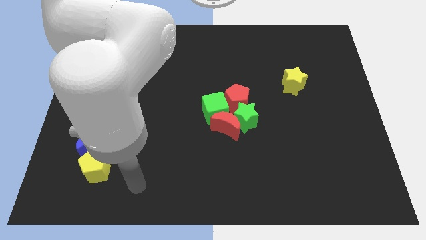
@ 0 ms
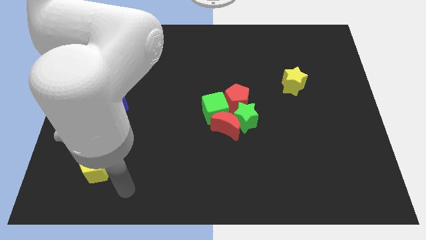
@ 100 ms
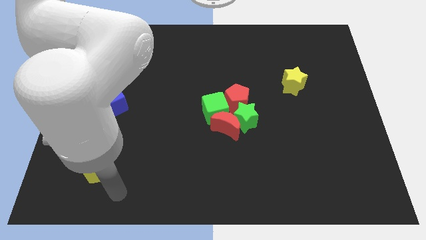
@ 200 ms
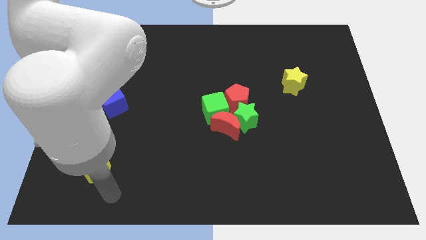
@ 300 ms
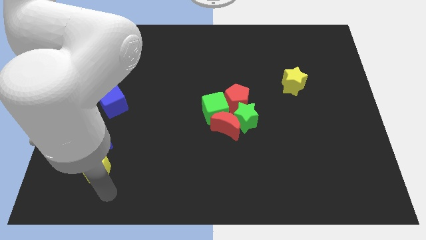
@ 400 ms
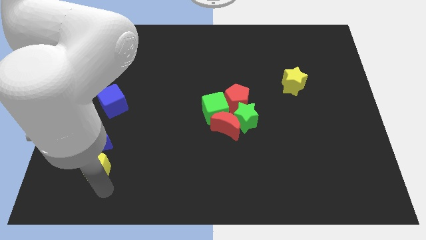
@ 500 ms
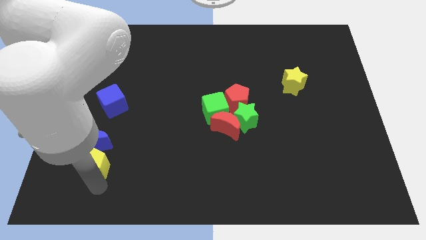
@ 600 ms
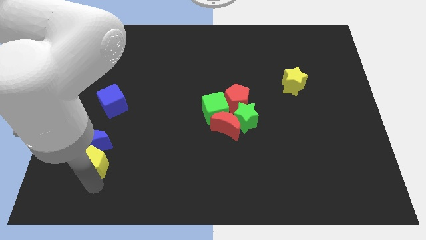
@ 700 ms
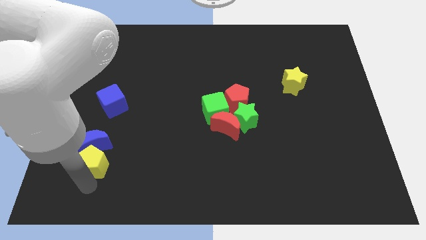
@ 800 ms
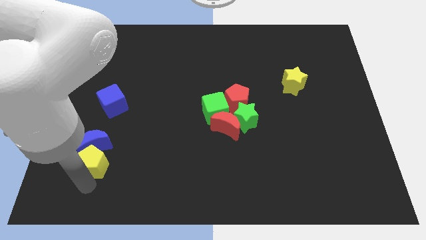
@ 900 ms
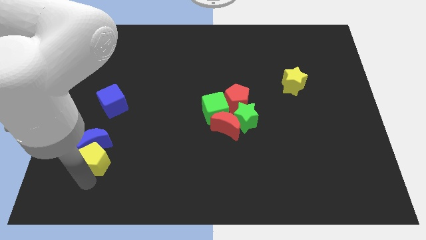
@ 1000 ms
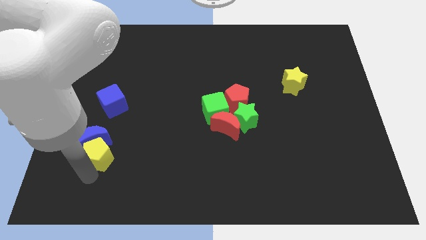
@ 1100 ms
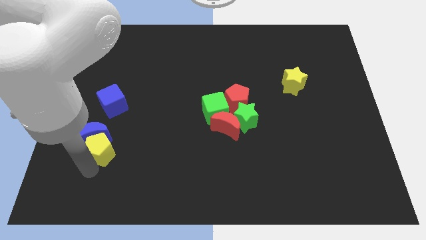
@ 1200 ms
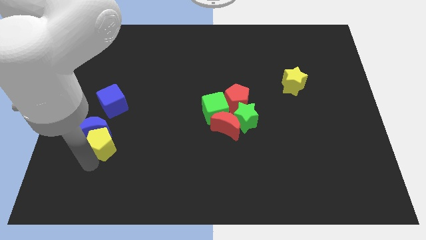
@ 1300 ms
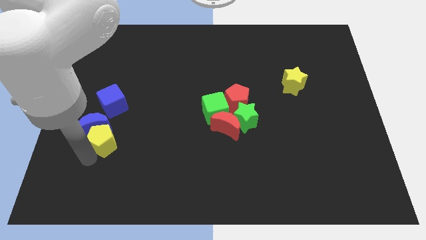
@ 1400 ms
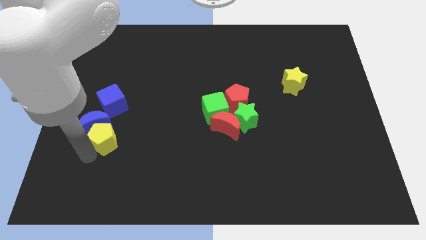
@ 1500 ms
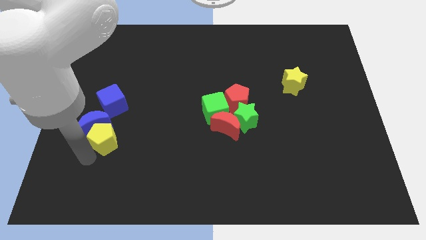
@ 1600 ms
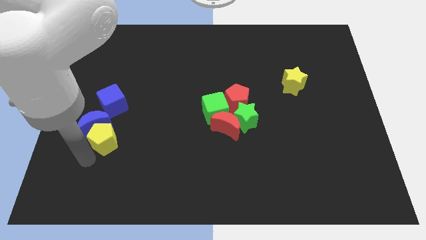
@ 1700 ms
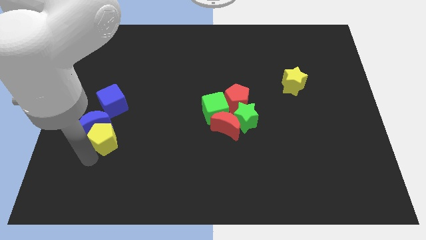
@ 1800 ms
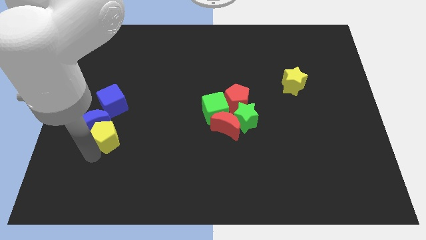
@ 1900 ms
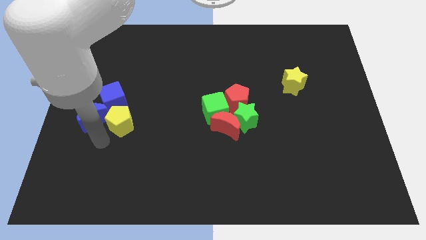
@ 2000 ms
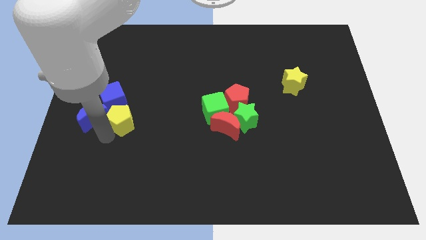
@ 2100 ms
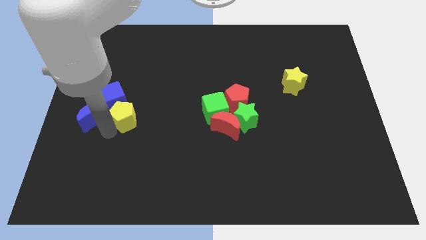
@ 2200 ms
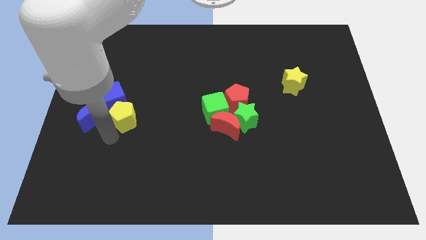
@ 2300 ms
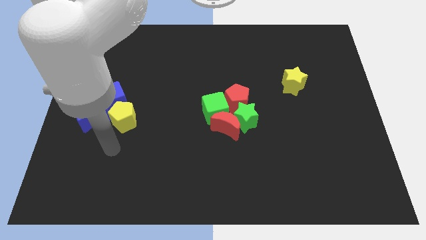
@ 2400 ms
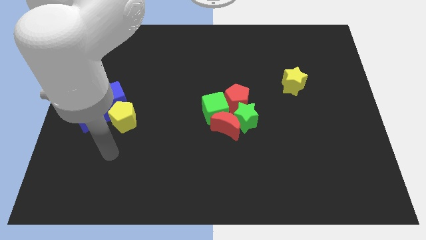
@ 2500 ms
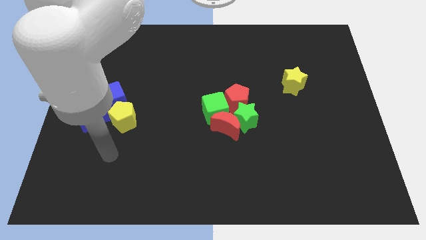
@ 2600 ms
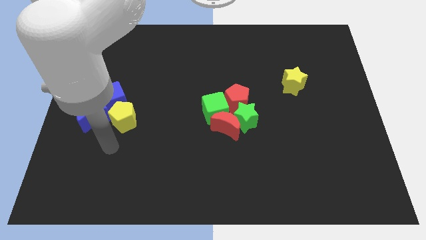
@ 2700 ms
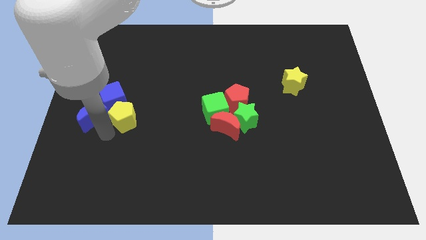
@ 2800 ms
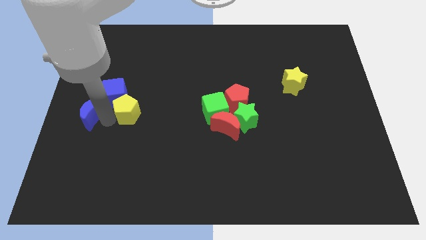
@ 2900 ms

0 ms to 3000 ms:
push yellow pentagon below blue cube

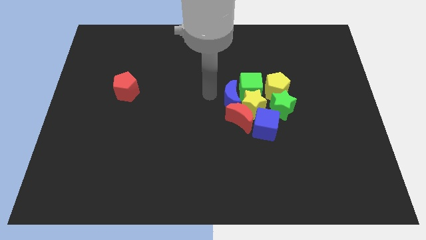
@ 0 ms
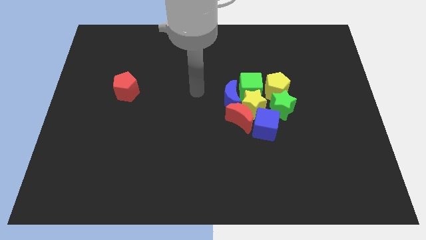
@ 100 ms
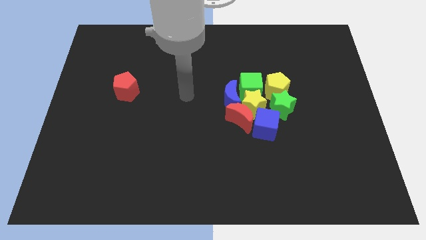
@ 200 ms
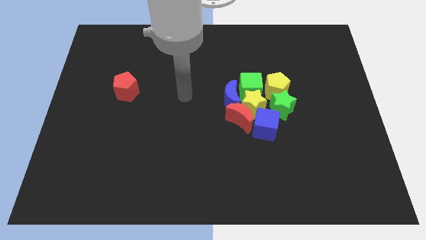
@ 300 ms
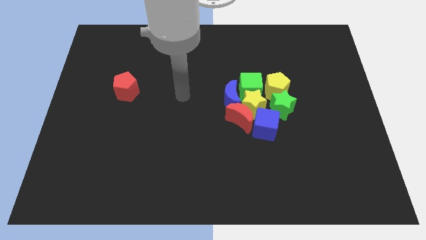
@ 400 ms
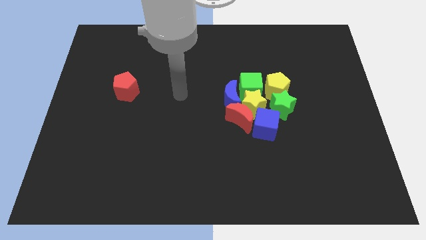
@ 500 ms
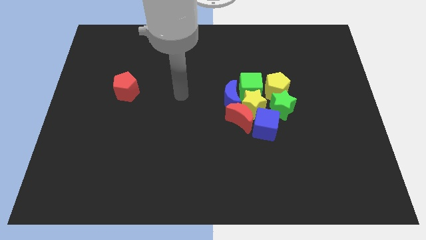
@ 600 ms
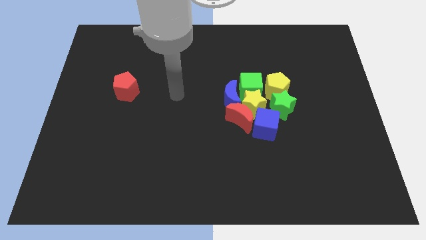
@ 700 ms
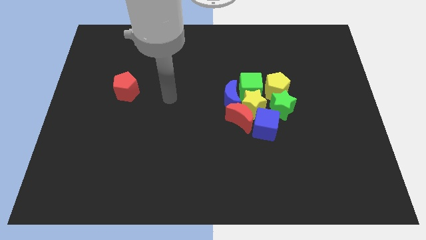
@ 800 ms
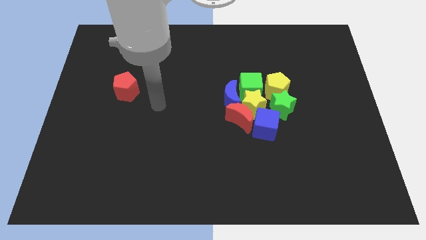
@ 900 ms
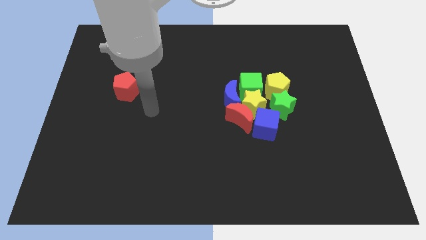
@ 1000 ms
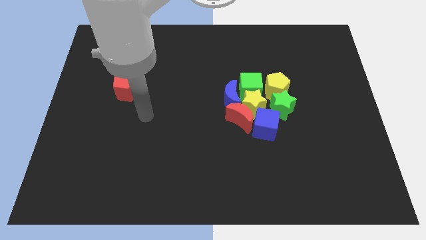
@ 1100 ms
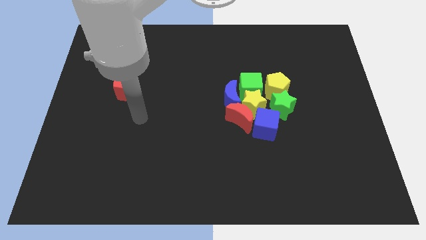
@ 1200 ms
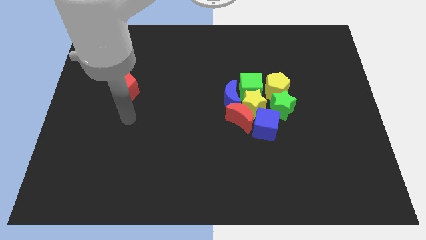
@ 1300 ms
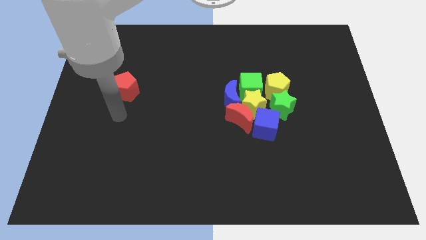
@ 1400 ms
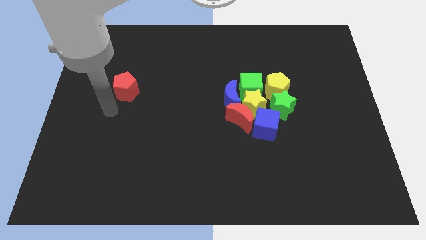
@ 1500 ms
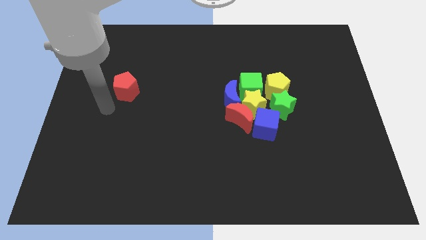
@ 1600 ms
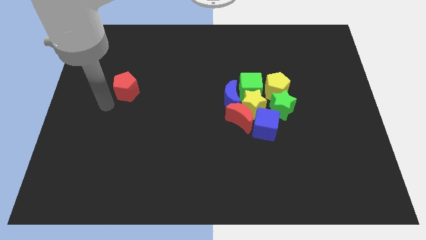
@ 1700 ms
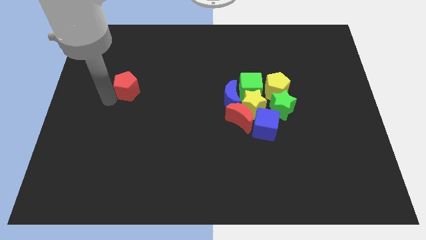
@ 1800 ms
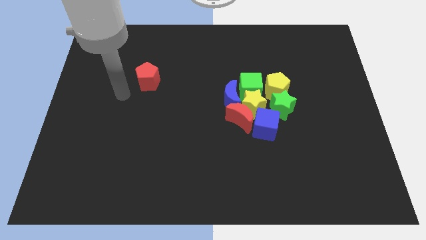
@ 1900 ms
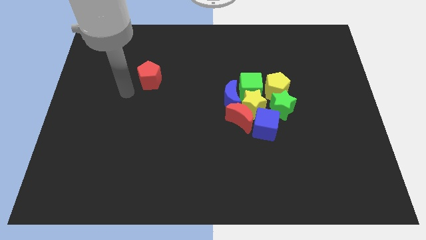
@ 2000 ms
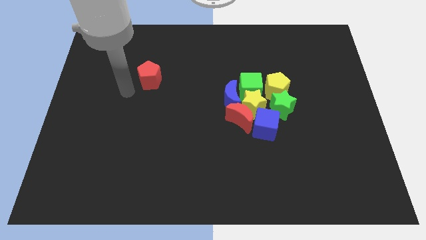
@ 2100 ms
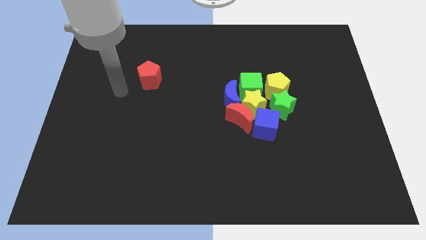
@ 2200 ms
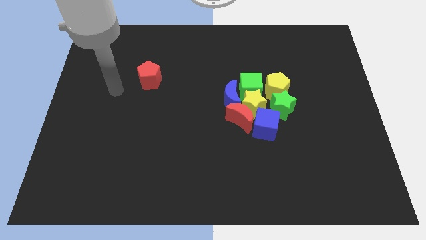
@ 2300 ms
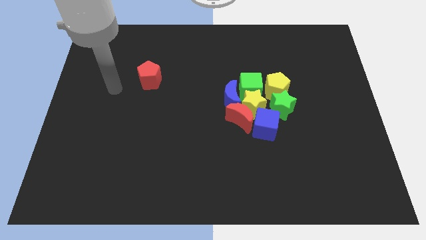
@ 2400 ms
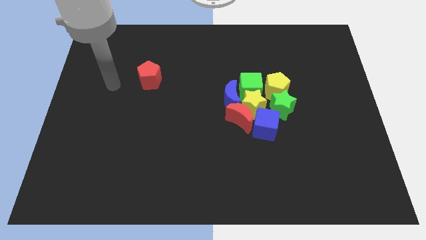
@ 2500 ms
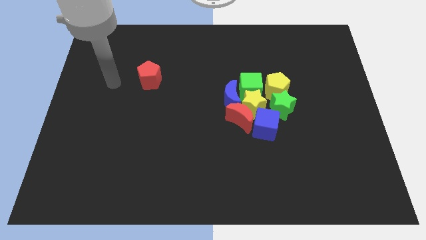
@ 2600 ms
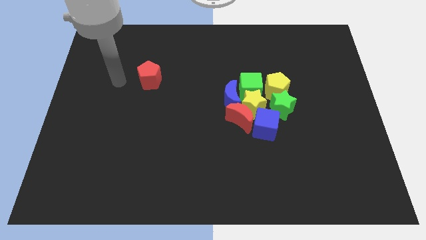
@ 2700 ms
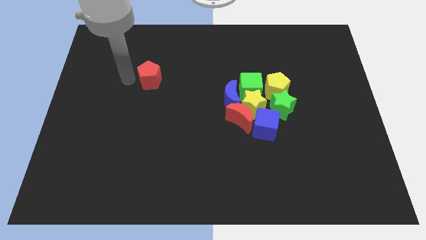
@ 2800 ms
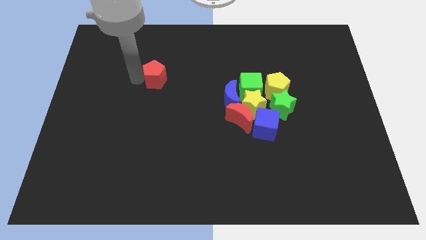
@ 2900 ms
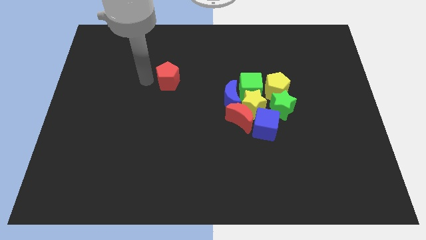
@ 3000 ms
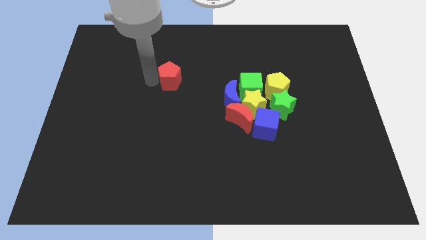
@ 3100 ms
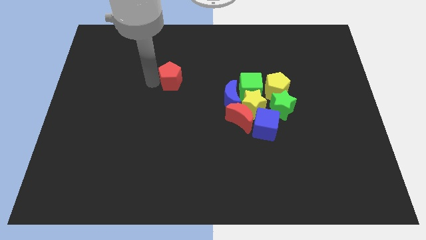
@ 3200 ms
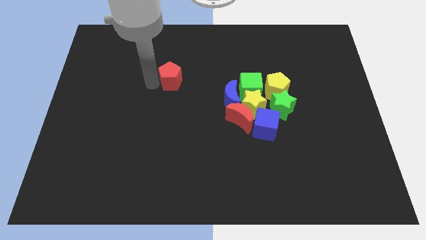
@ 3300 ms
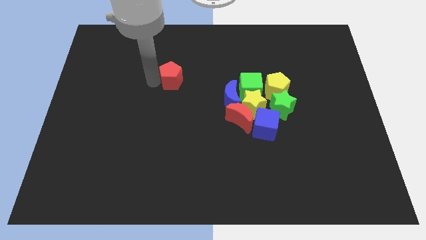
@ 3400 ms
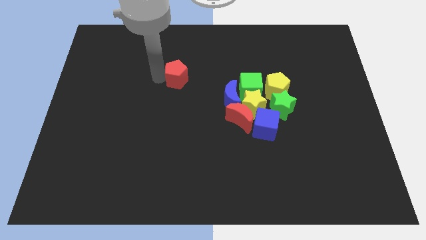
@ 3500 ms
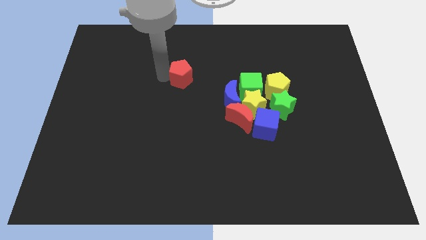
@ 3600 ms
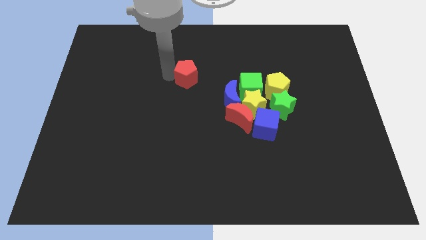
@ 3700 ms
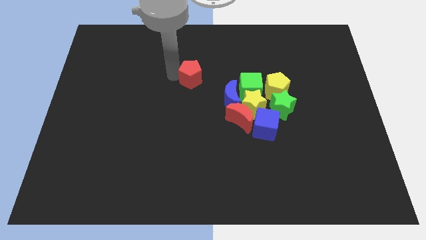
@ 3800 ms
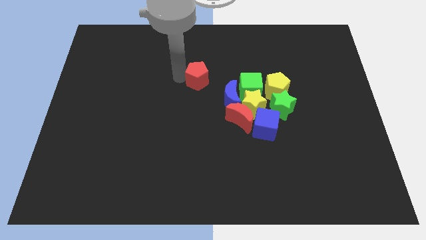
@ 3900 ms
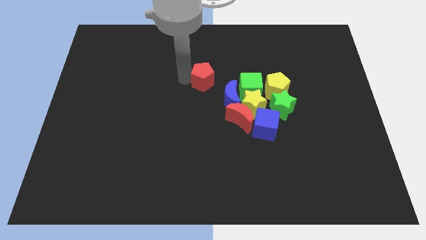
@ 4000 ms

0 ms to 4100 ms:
place red crescent diagonally top left to the blue crescent

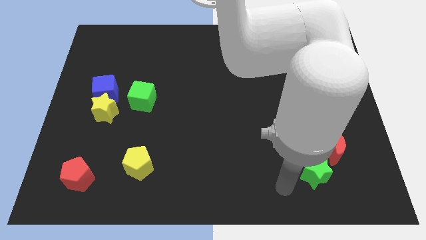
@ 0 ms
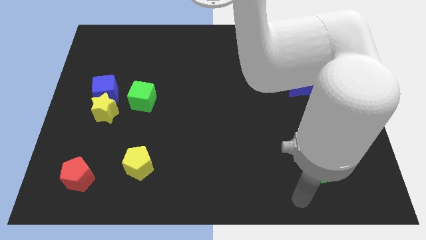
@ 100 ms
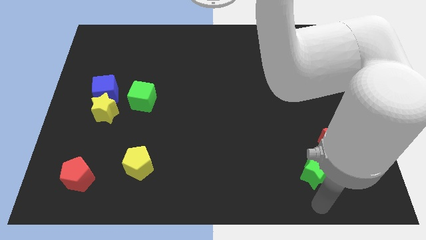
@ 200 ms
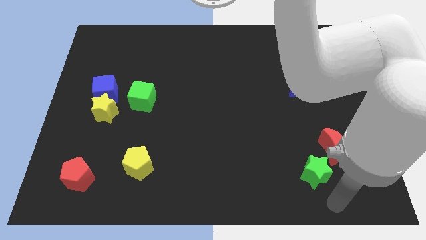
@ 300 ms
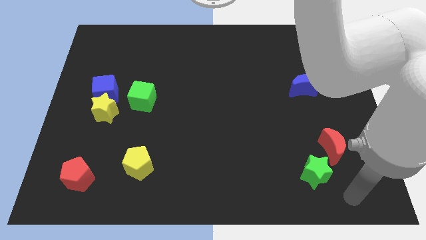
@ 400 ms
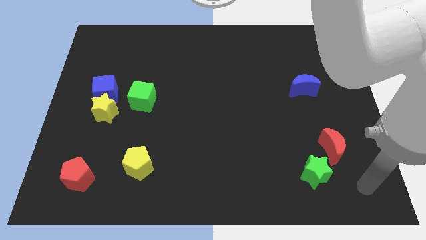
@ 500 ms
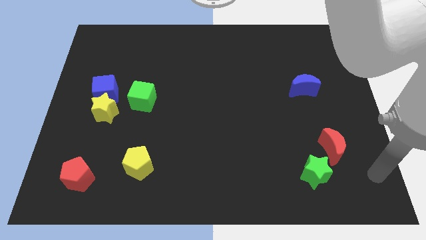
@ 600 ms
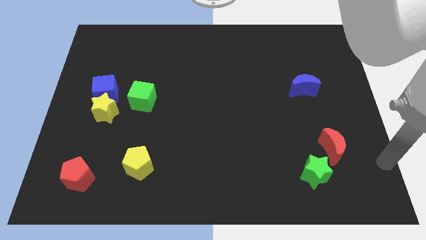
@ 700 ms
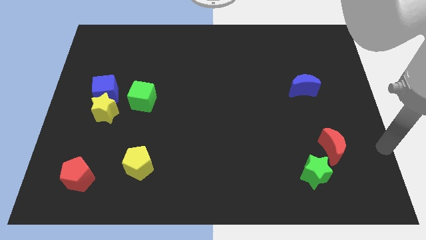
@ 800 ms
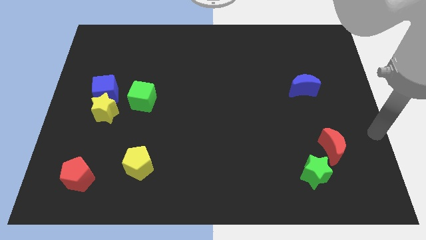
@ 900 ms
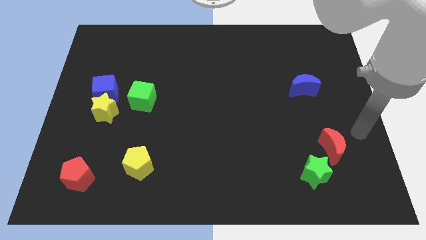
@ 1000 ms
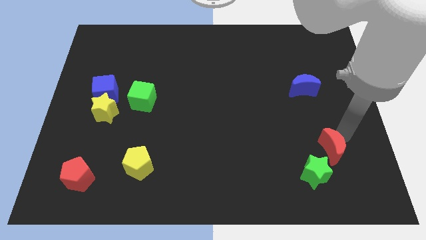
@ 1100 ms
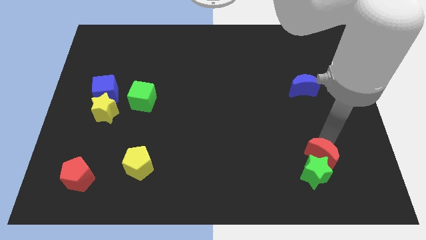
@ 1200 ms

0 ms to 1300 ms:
move your arm towards the red crescent

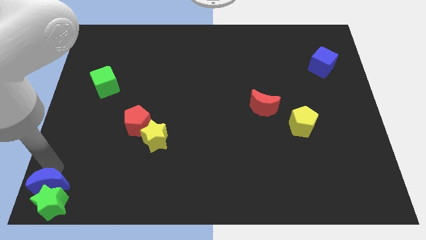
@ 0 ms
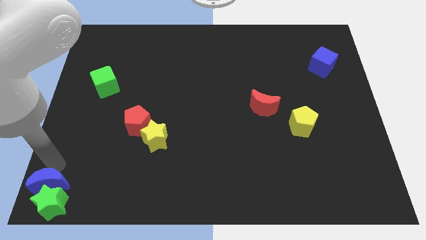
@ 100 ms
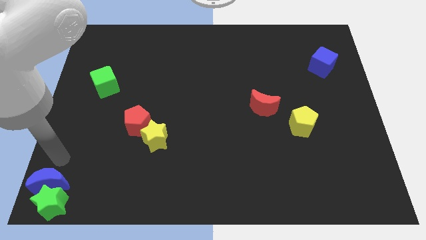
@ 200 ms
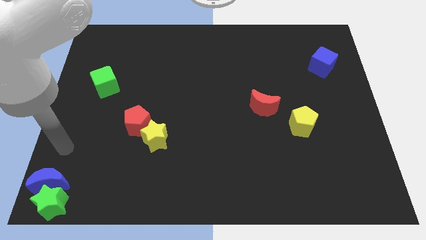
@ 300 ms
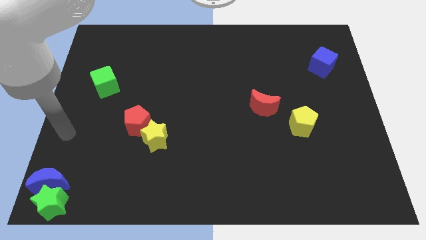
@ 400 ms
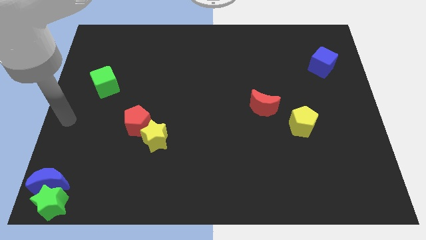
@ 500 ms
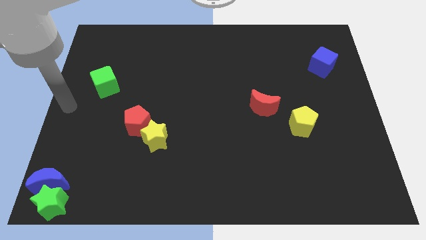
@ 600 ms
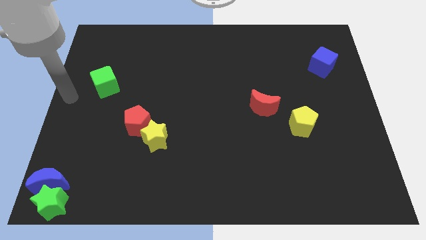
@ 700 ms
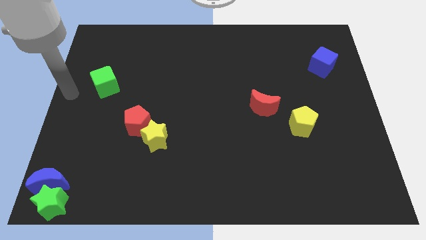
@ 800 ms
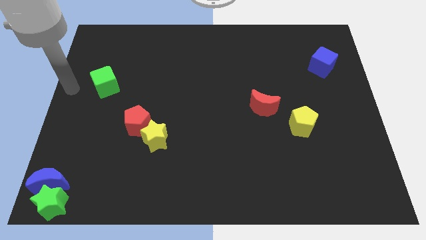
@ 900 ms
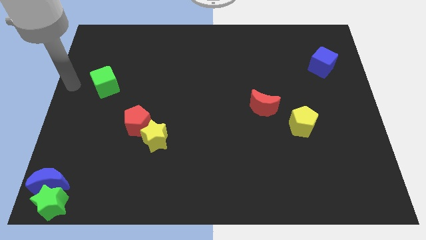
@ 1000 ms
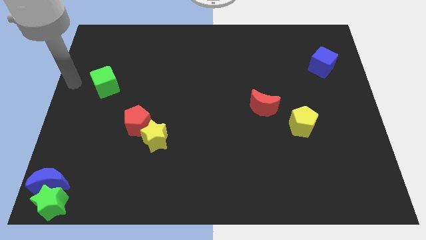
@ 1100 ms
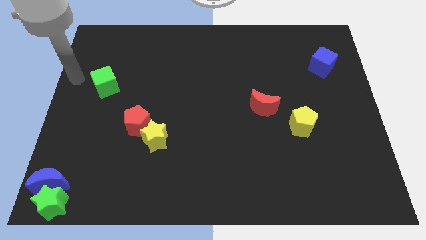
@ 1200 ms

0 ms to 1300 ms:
move your arm towards the top side of the board
